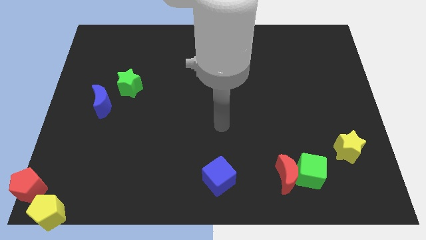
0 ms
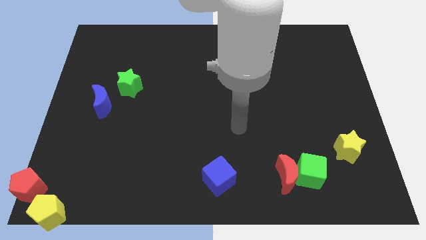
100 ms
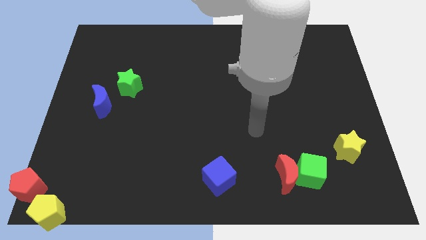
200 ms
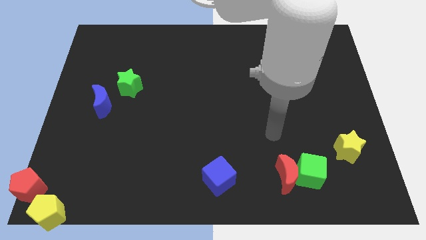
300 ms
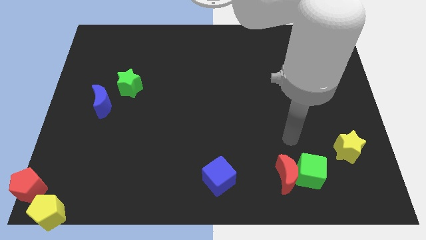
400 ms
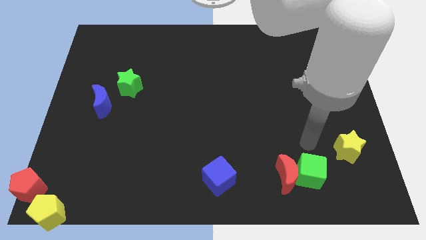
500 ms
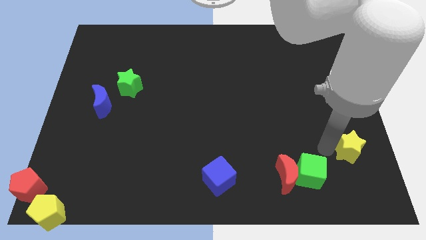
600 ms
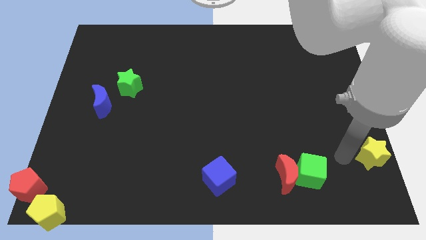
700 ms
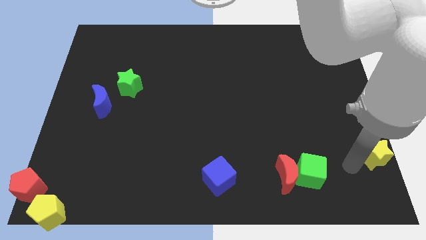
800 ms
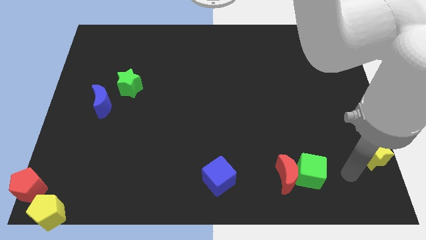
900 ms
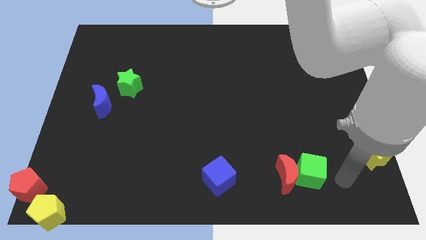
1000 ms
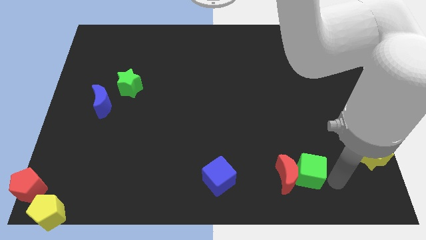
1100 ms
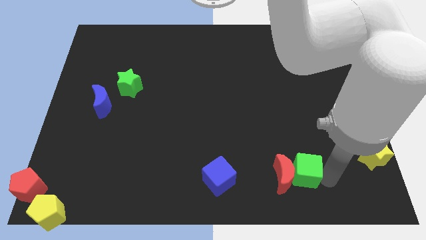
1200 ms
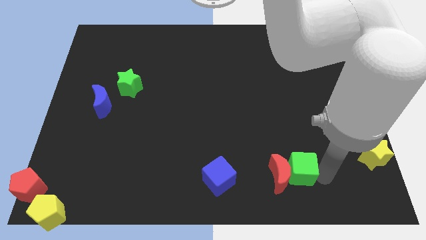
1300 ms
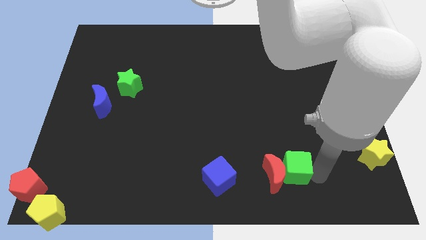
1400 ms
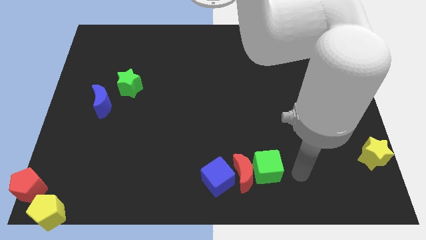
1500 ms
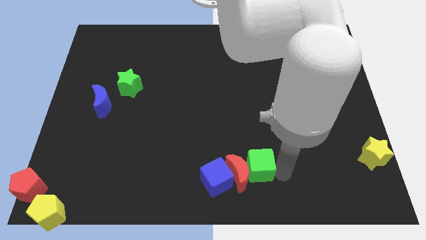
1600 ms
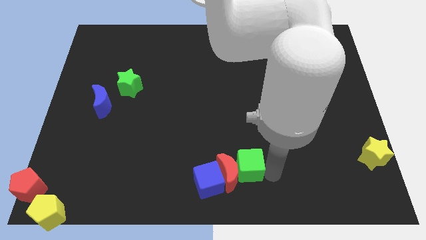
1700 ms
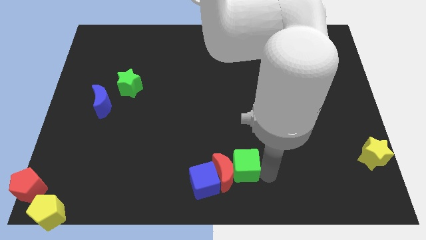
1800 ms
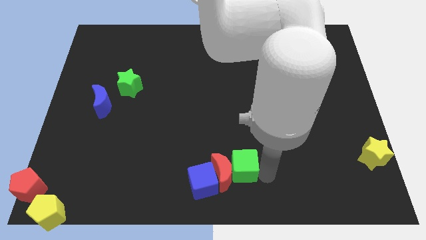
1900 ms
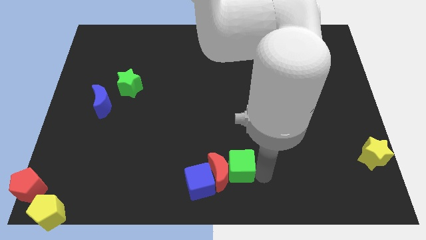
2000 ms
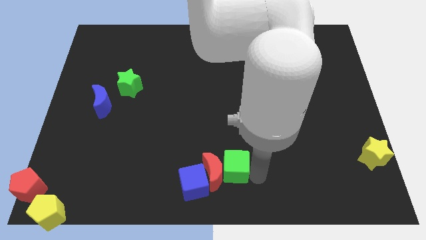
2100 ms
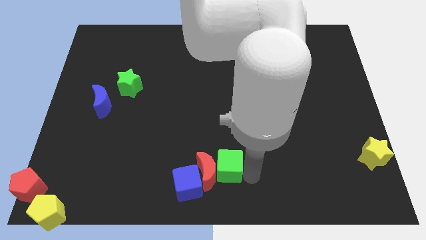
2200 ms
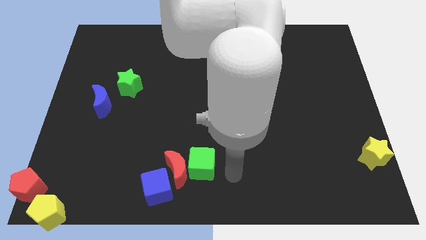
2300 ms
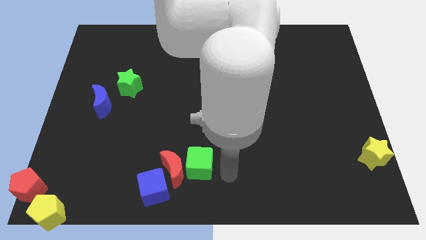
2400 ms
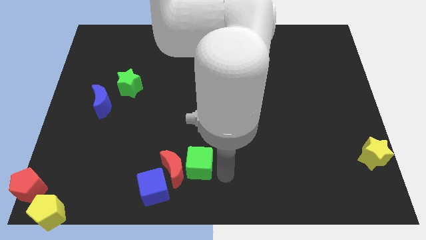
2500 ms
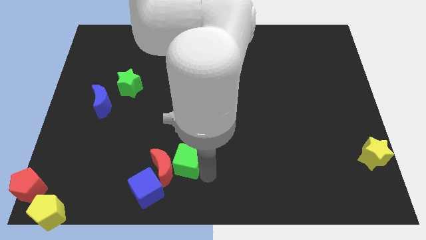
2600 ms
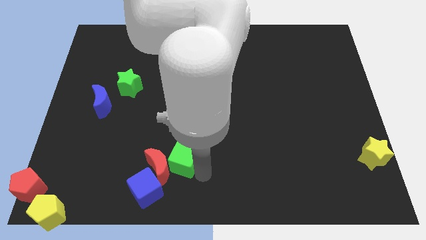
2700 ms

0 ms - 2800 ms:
push green cube along with red crescent in to blue cube

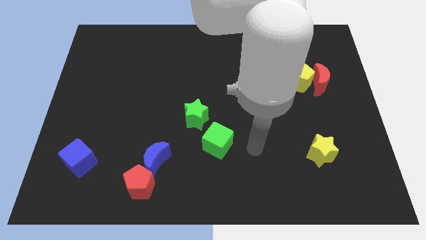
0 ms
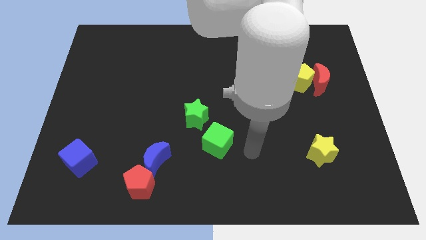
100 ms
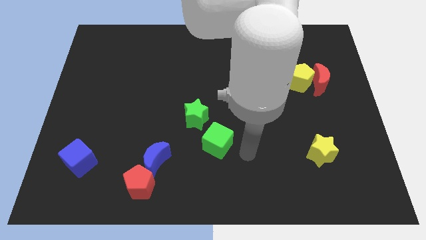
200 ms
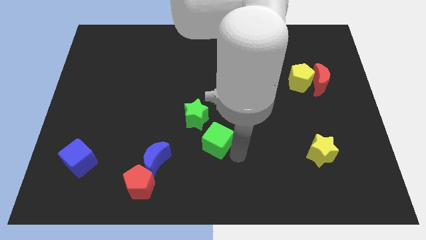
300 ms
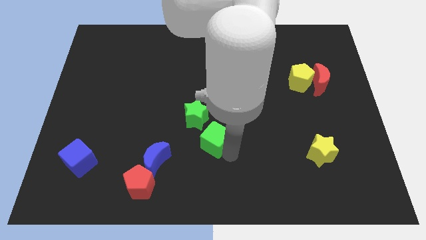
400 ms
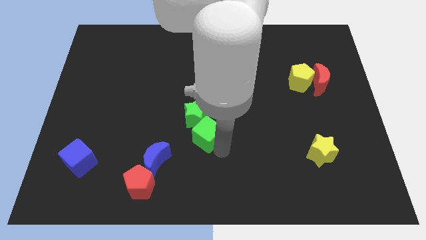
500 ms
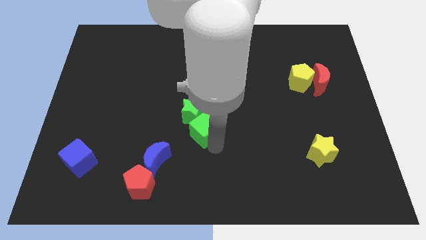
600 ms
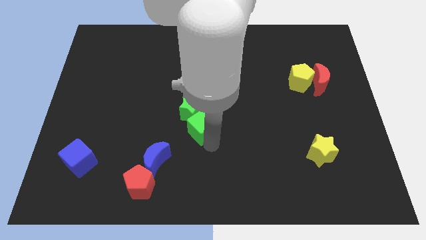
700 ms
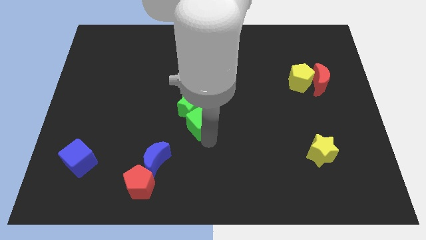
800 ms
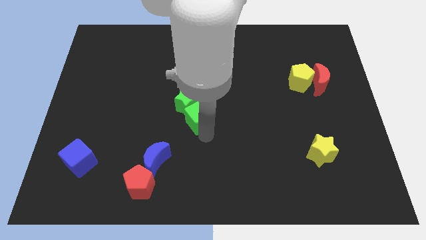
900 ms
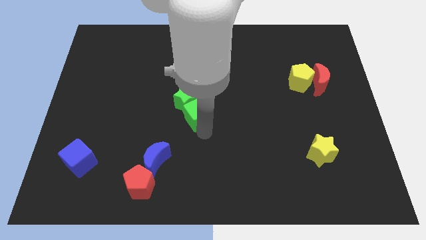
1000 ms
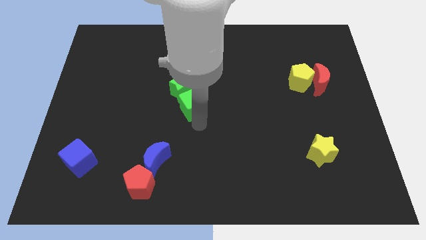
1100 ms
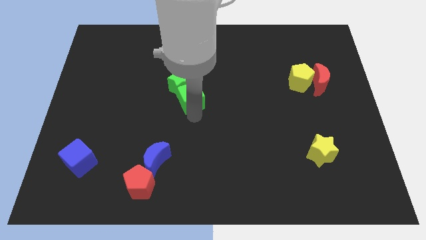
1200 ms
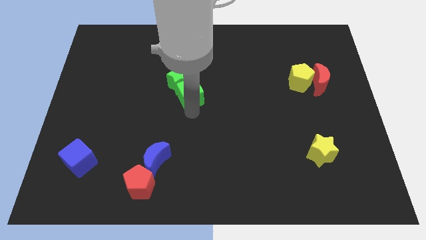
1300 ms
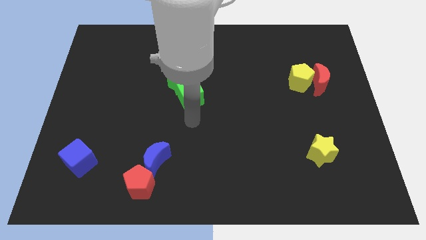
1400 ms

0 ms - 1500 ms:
place both the green blocks at center of the board

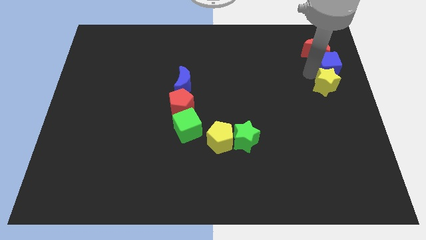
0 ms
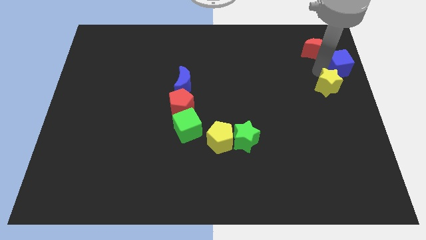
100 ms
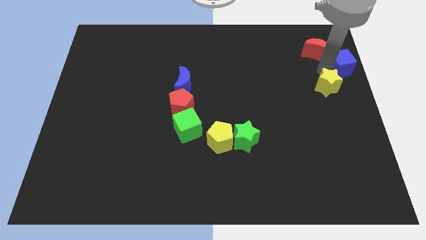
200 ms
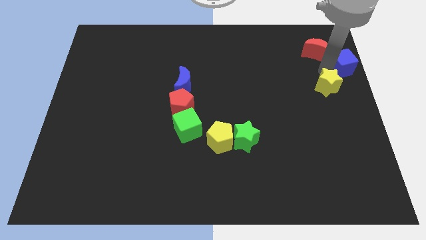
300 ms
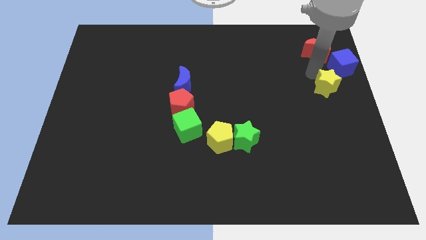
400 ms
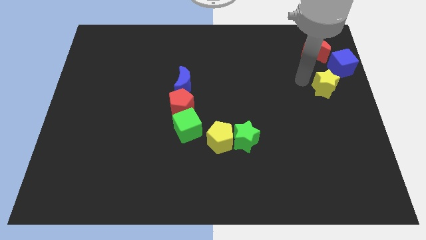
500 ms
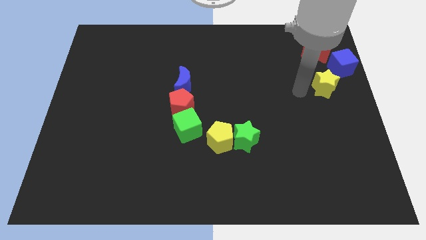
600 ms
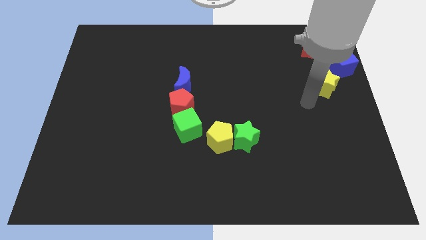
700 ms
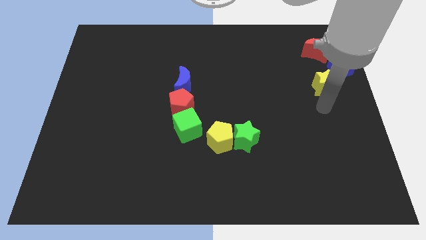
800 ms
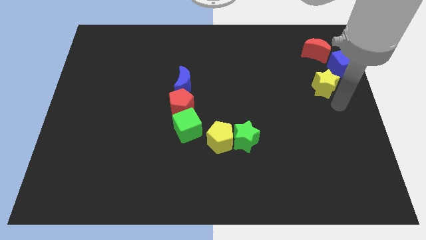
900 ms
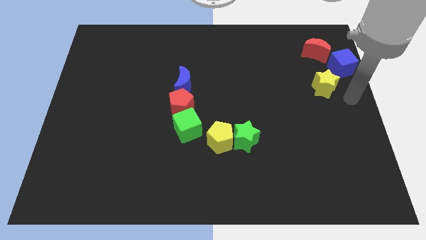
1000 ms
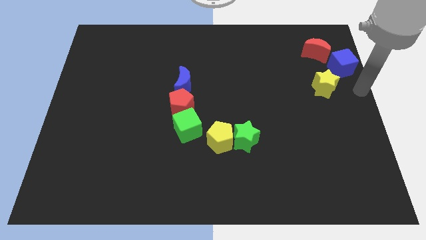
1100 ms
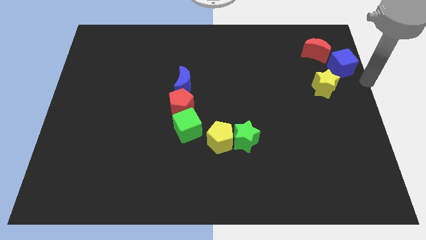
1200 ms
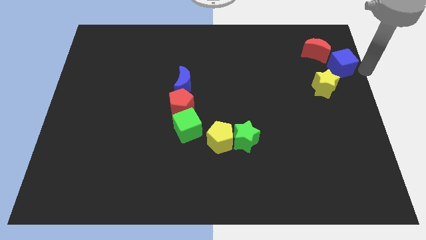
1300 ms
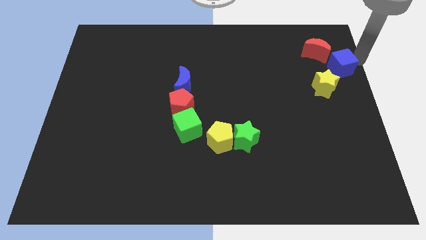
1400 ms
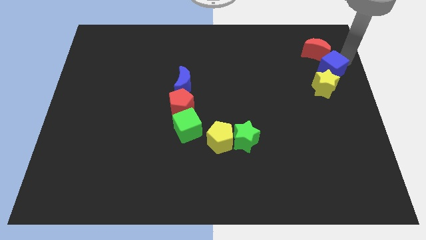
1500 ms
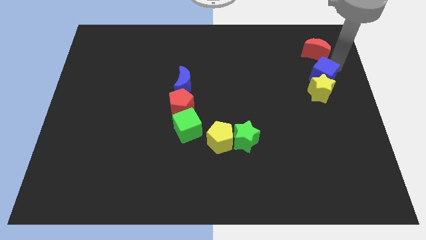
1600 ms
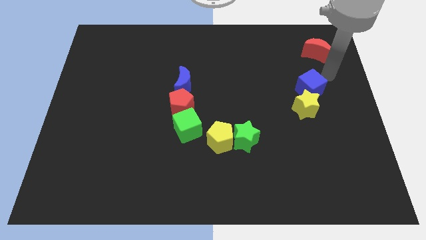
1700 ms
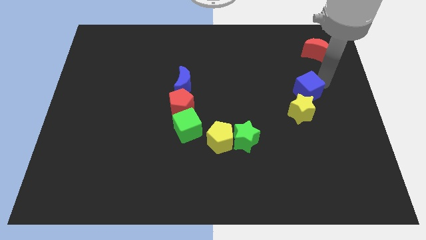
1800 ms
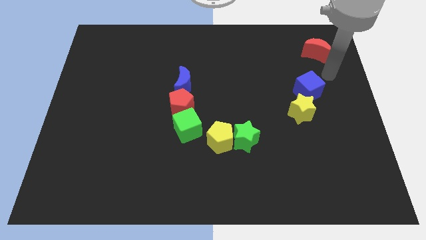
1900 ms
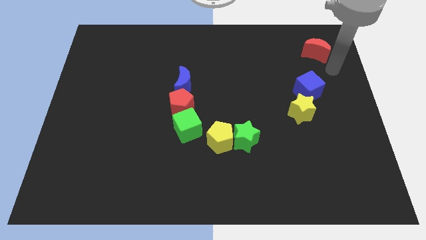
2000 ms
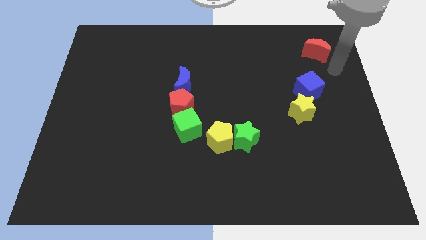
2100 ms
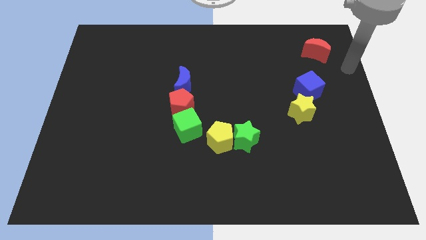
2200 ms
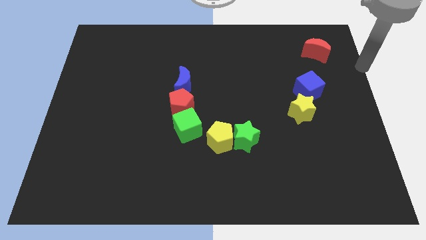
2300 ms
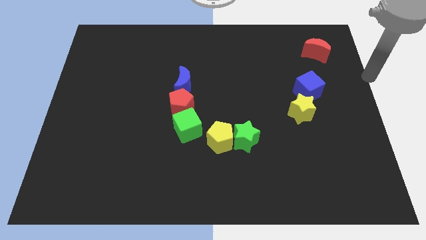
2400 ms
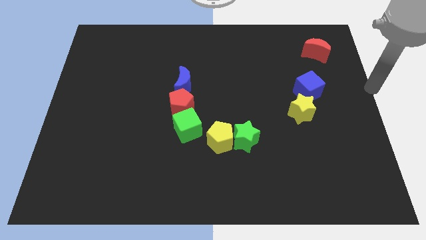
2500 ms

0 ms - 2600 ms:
push blue cube into yellow star

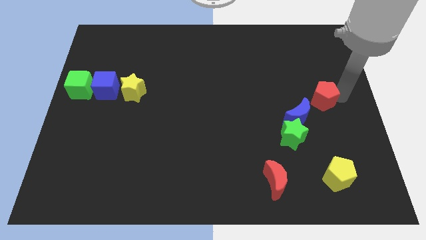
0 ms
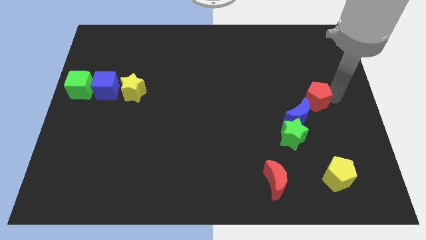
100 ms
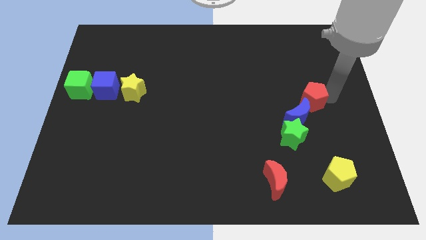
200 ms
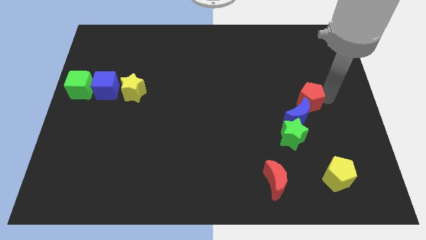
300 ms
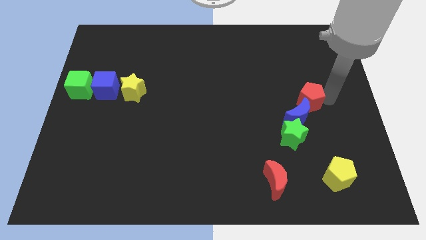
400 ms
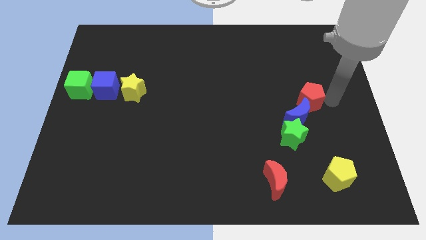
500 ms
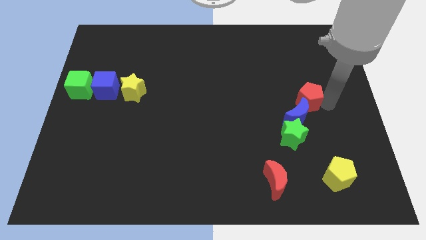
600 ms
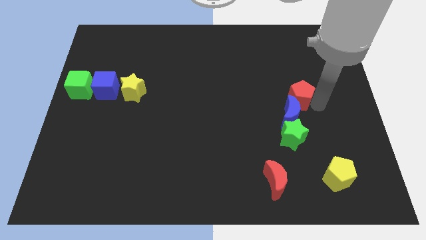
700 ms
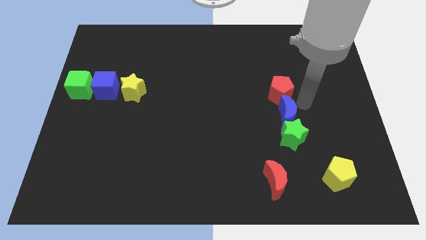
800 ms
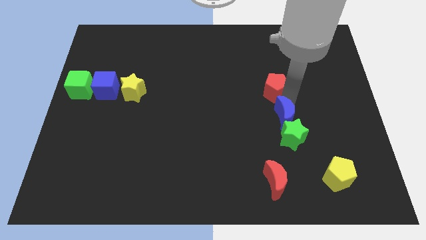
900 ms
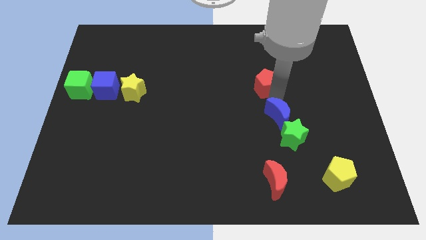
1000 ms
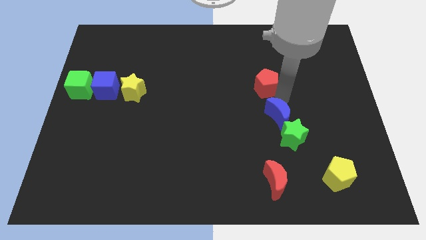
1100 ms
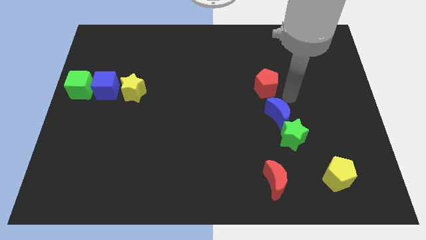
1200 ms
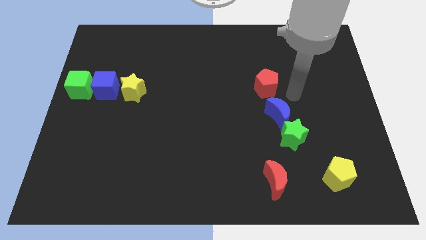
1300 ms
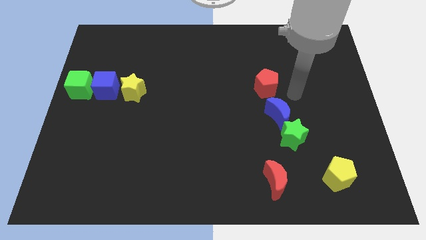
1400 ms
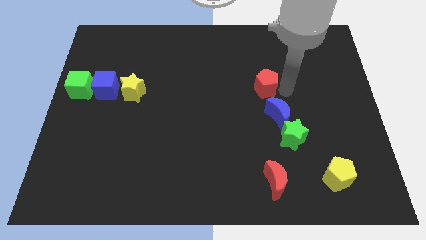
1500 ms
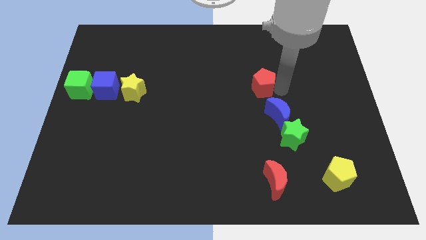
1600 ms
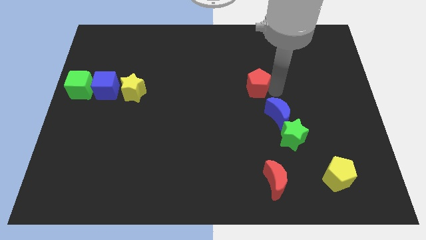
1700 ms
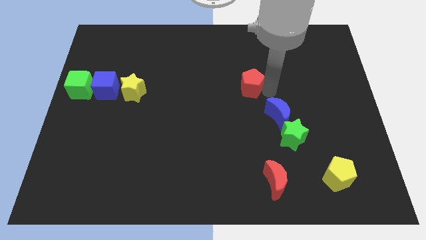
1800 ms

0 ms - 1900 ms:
push red pentagon above red crescent

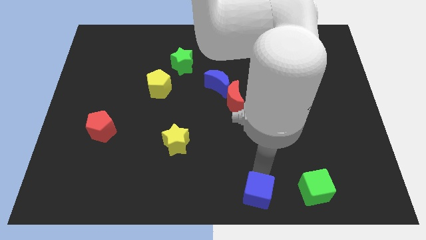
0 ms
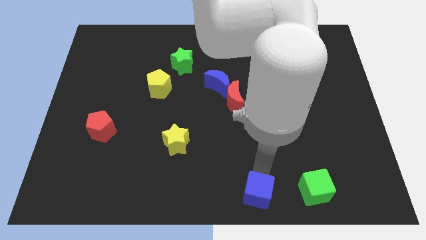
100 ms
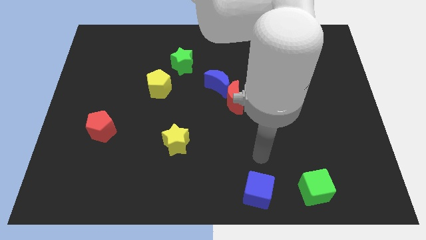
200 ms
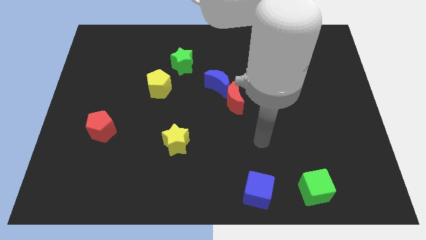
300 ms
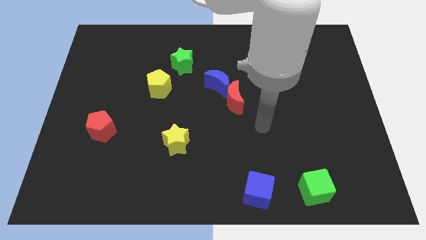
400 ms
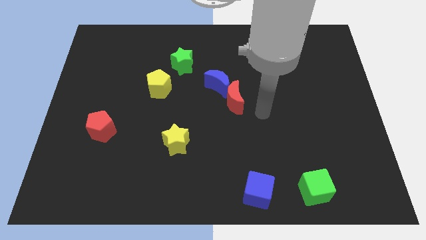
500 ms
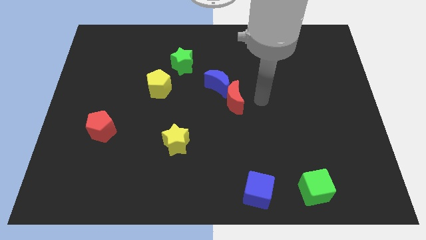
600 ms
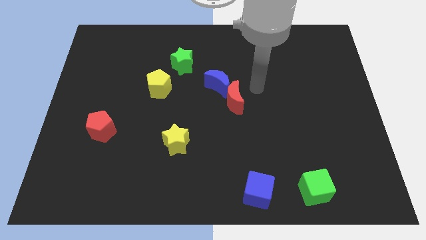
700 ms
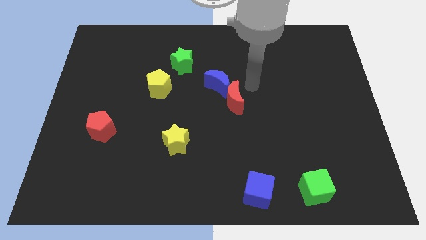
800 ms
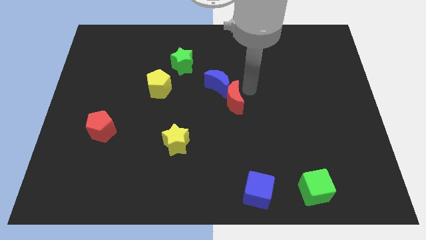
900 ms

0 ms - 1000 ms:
place your arm at the top right side of red crescent
